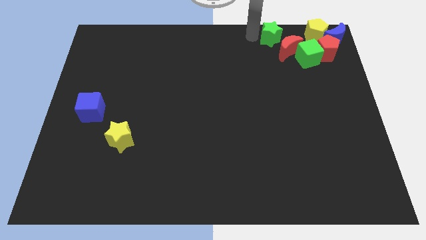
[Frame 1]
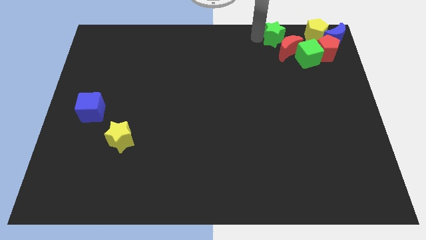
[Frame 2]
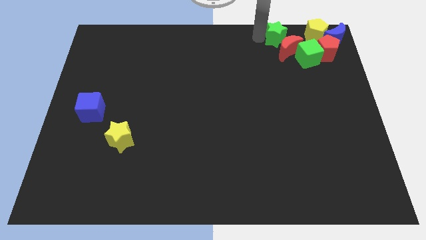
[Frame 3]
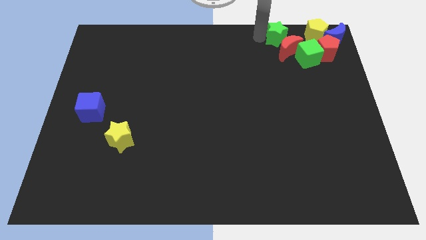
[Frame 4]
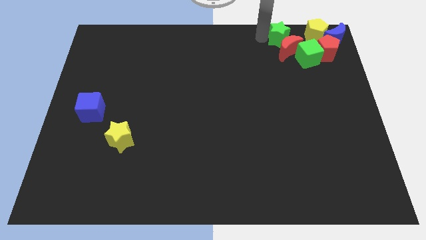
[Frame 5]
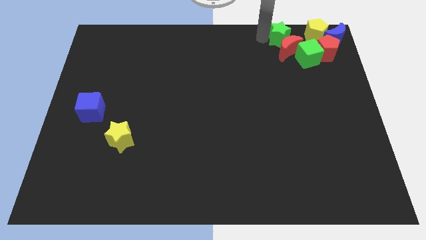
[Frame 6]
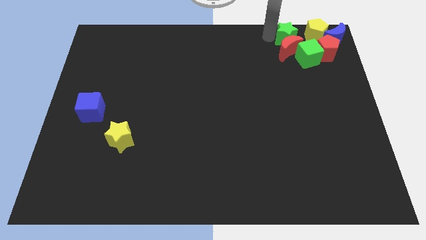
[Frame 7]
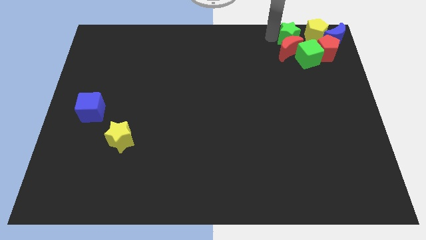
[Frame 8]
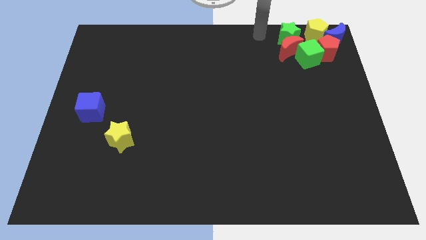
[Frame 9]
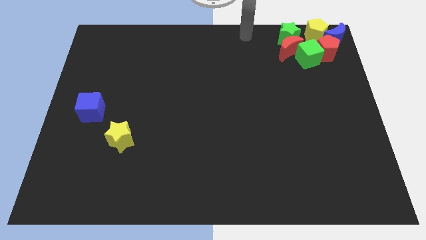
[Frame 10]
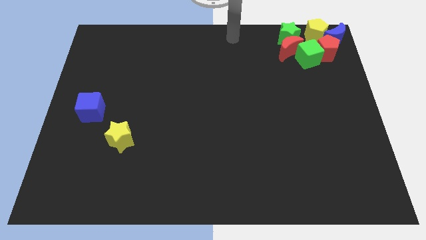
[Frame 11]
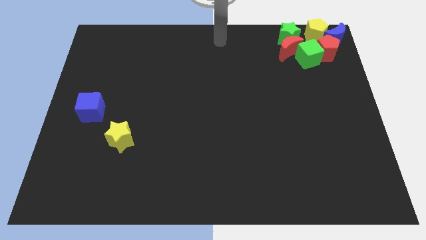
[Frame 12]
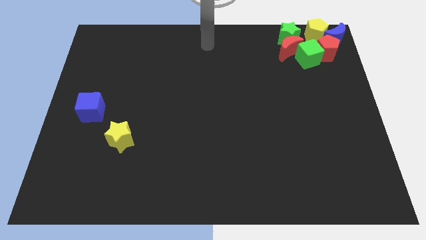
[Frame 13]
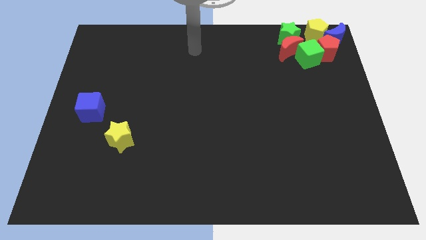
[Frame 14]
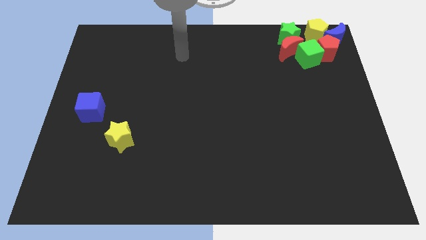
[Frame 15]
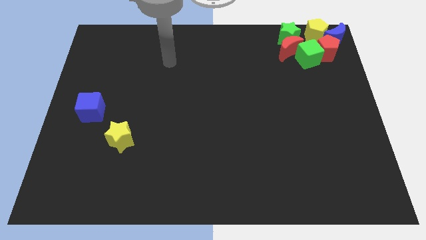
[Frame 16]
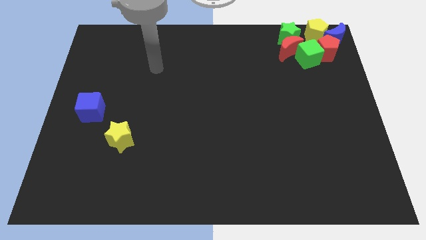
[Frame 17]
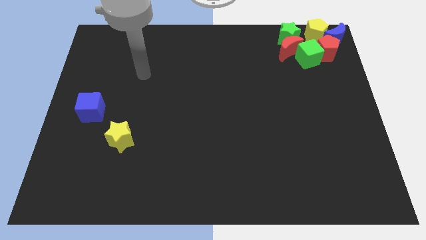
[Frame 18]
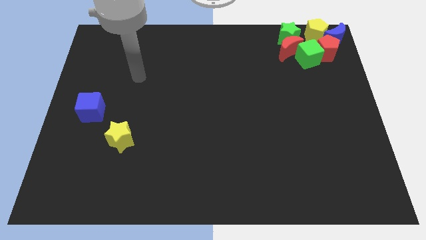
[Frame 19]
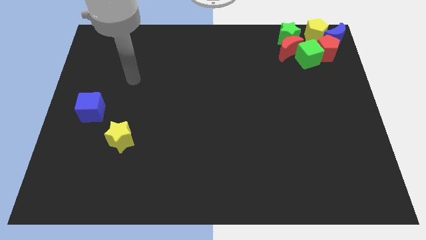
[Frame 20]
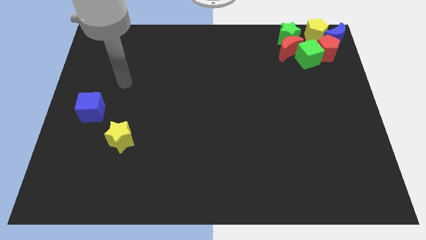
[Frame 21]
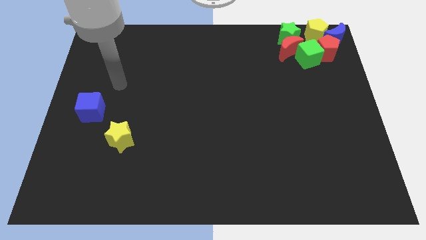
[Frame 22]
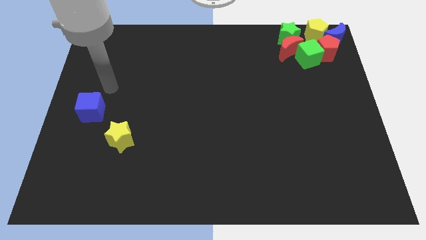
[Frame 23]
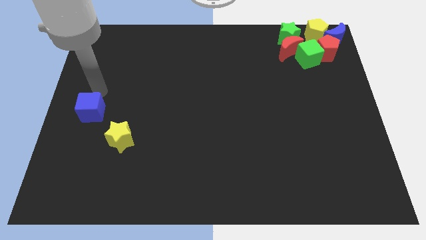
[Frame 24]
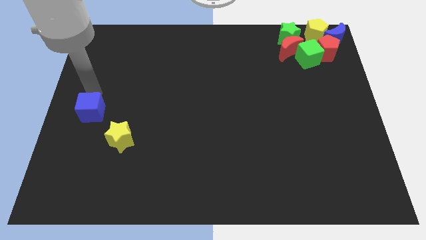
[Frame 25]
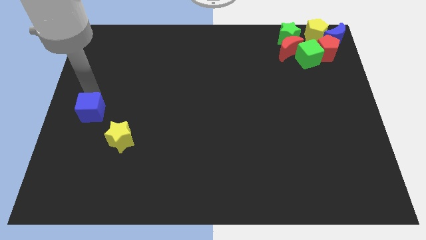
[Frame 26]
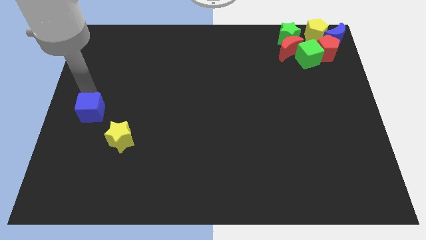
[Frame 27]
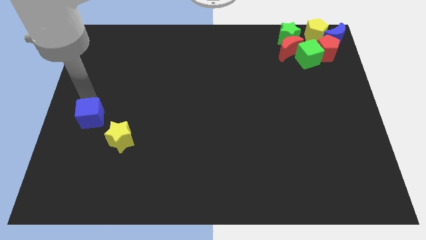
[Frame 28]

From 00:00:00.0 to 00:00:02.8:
place your arm top of blue cube

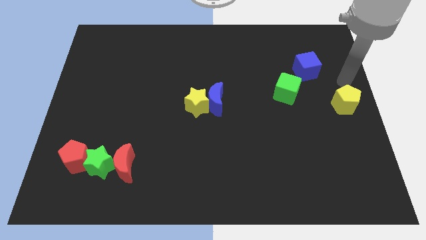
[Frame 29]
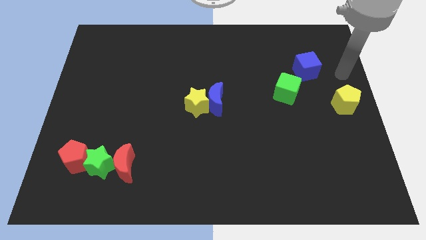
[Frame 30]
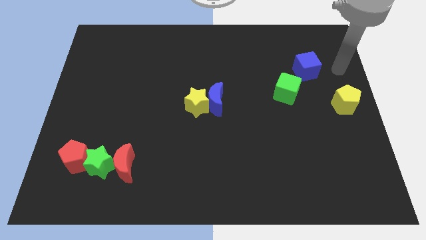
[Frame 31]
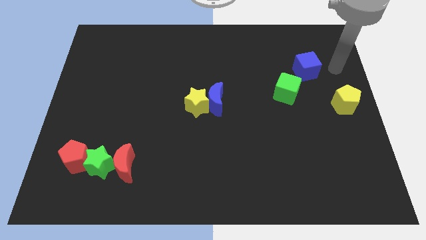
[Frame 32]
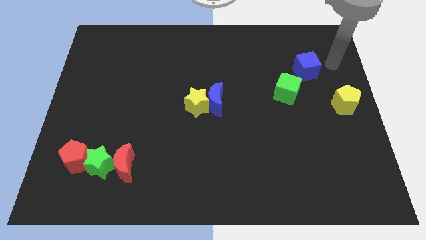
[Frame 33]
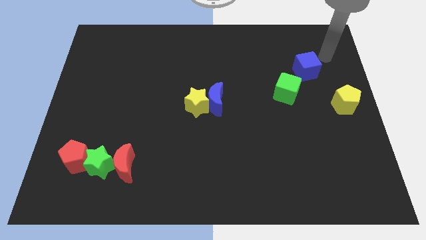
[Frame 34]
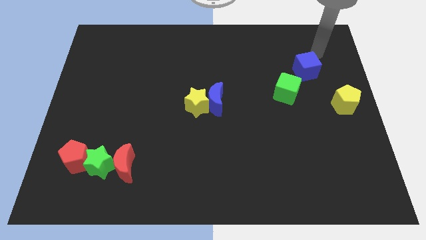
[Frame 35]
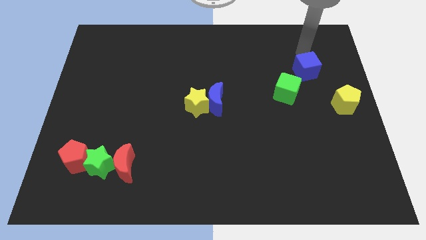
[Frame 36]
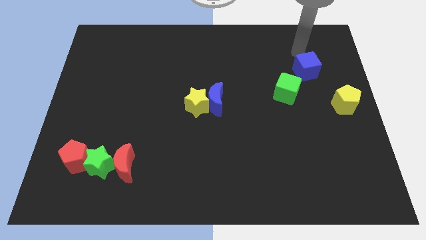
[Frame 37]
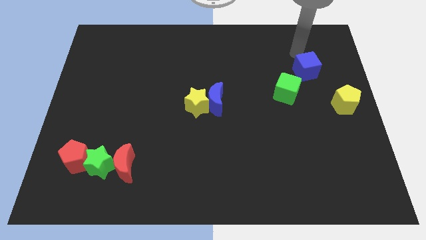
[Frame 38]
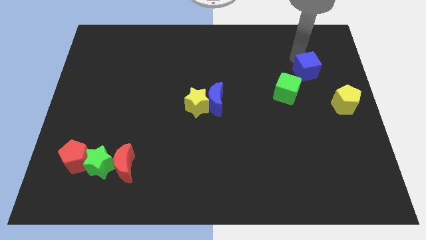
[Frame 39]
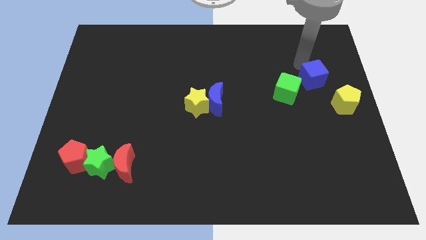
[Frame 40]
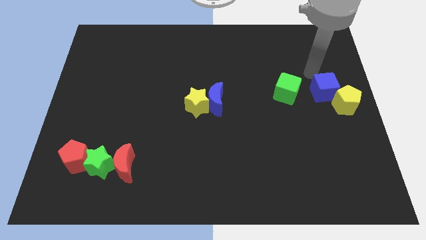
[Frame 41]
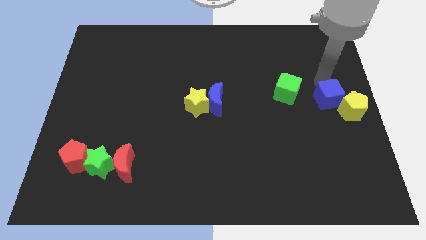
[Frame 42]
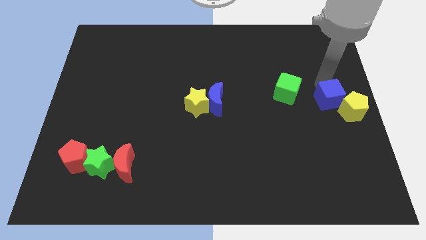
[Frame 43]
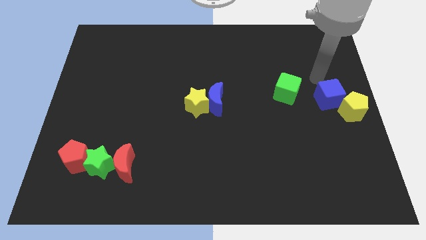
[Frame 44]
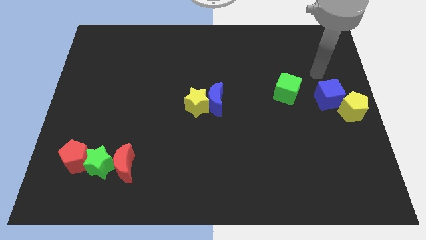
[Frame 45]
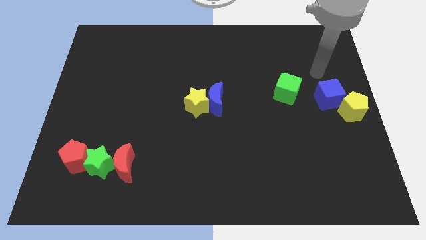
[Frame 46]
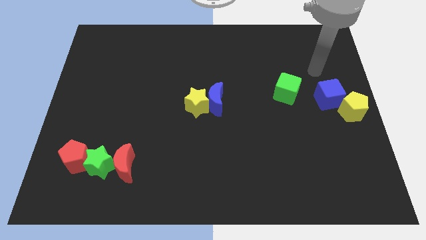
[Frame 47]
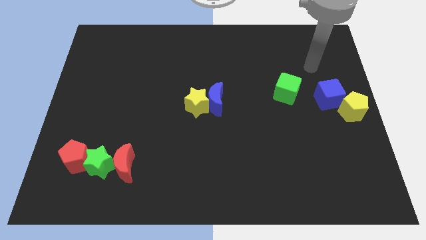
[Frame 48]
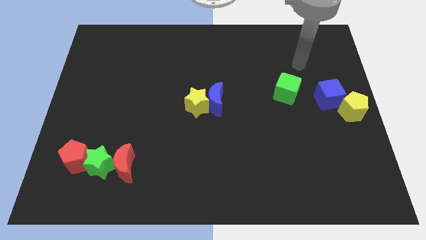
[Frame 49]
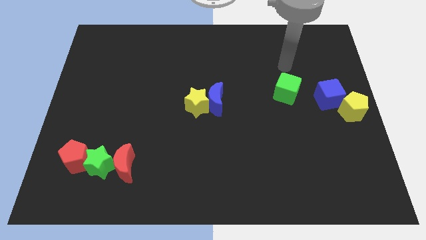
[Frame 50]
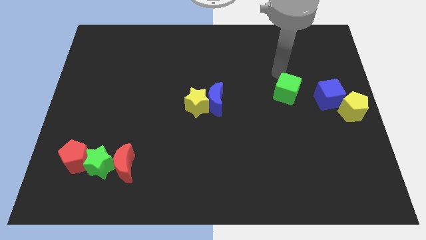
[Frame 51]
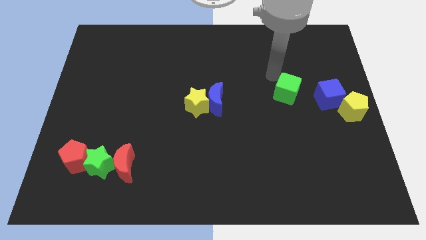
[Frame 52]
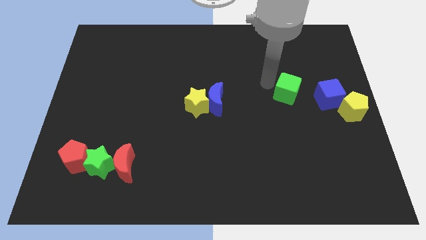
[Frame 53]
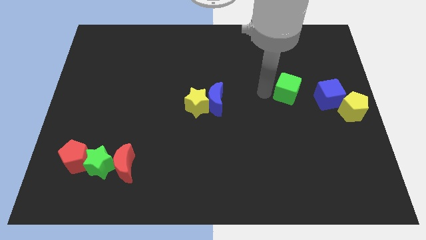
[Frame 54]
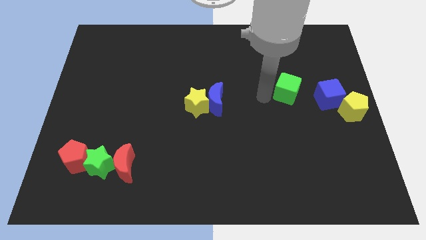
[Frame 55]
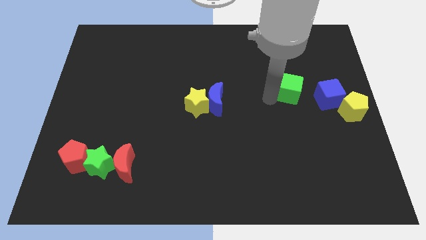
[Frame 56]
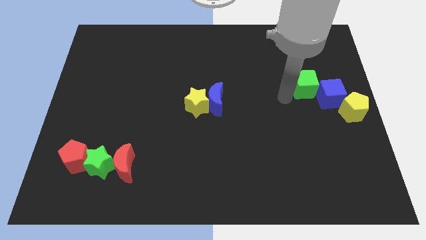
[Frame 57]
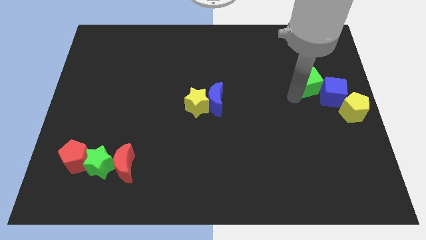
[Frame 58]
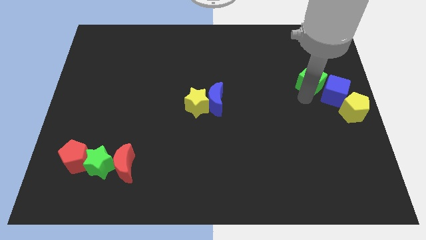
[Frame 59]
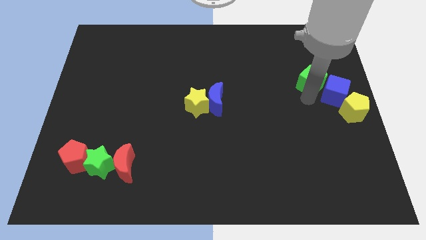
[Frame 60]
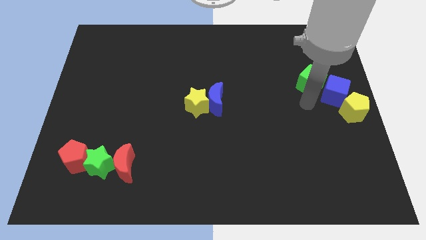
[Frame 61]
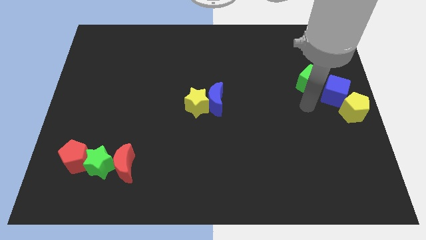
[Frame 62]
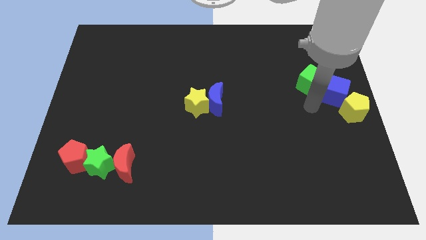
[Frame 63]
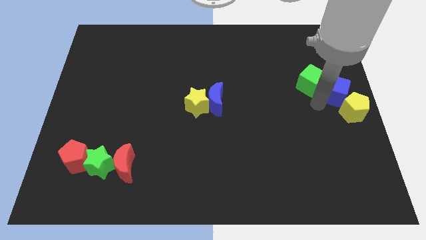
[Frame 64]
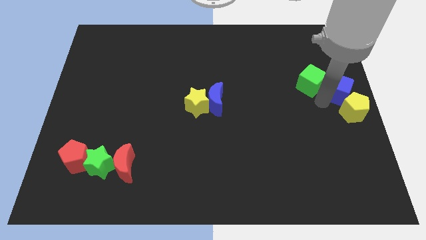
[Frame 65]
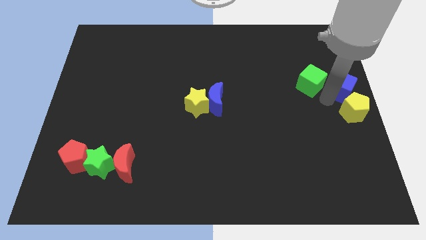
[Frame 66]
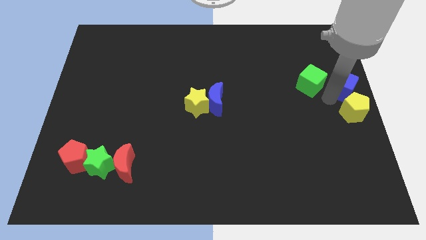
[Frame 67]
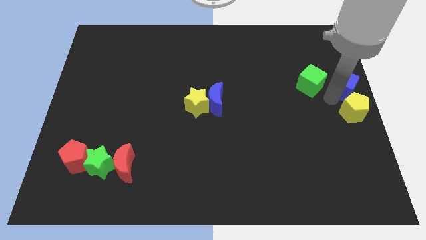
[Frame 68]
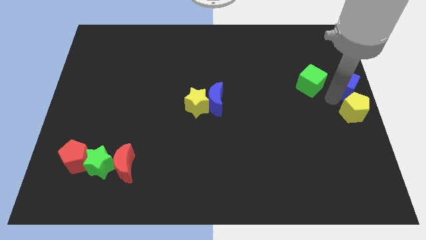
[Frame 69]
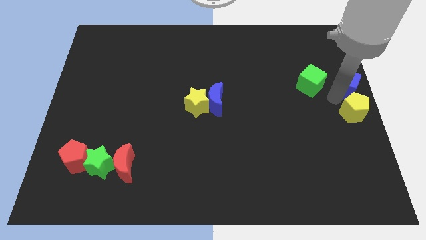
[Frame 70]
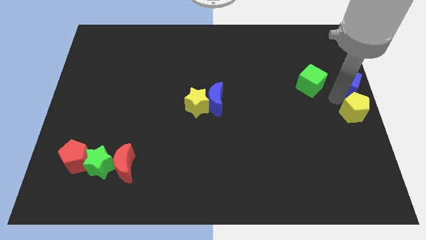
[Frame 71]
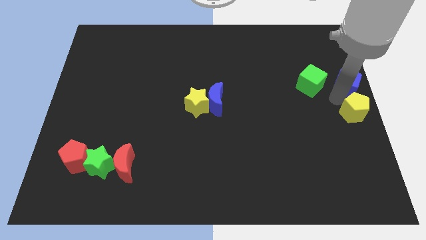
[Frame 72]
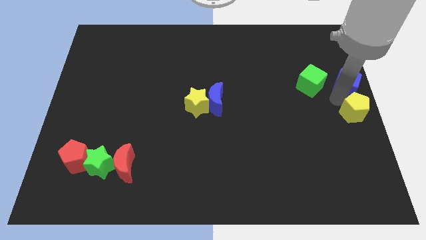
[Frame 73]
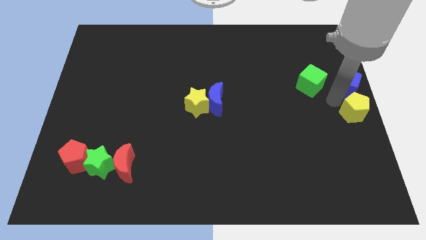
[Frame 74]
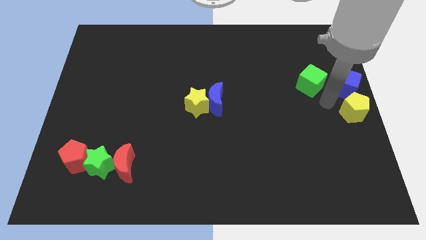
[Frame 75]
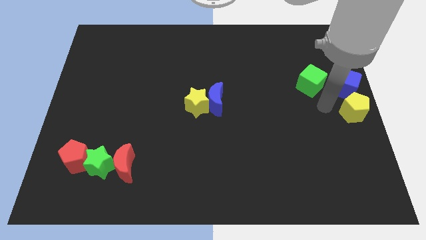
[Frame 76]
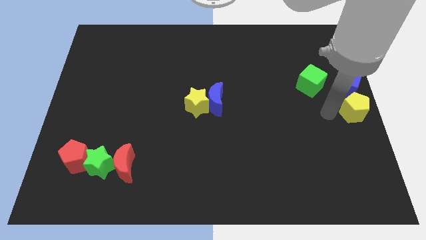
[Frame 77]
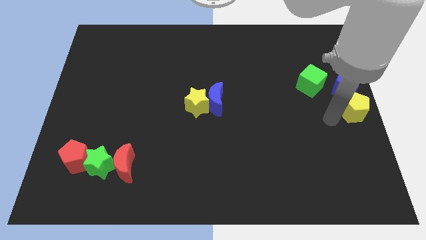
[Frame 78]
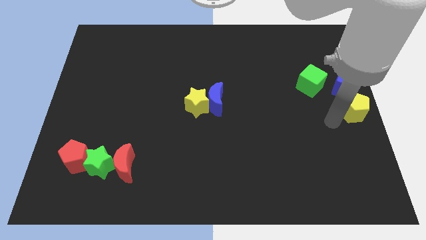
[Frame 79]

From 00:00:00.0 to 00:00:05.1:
move the blue cube to the top of the yellow pentagon

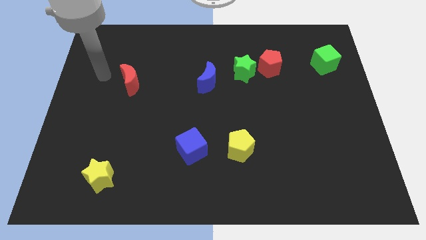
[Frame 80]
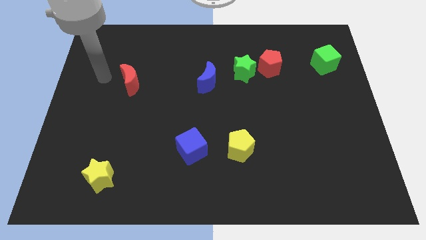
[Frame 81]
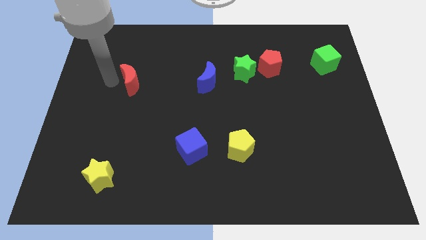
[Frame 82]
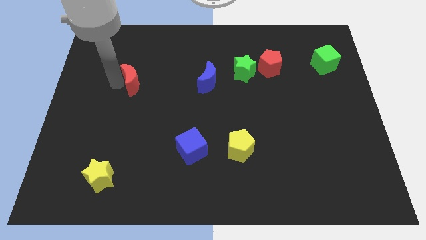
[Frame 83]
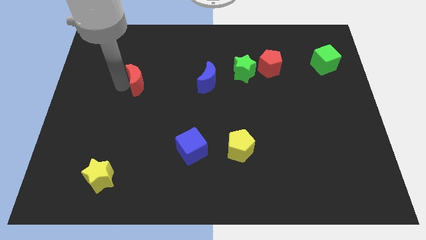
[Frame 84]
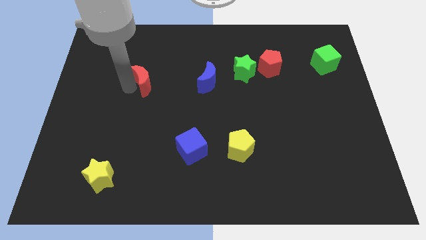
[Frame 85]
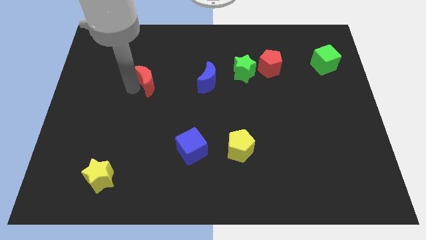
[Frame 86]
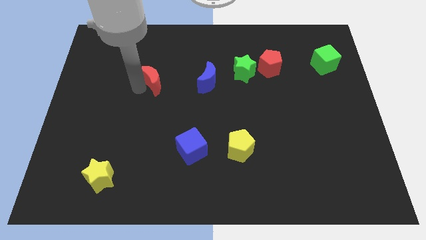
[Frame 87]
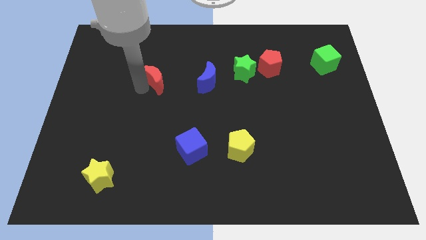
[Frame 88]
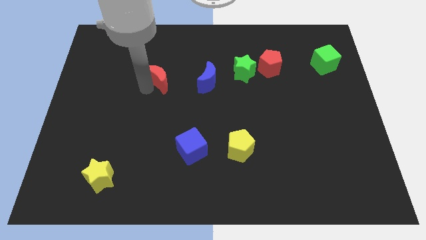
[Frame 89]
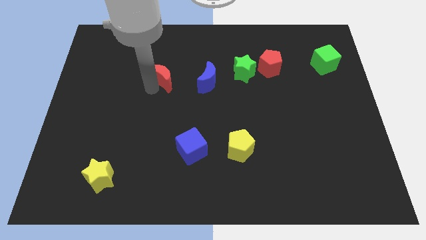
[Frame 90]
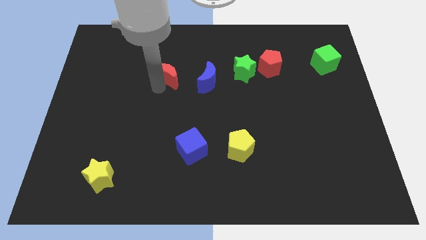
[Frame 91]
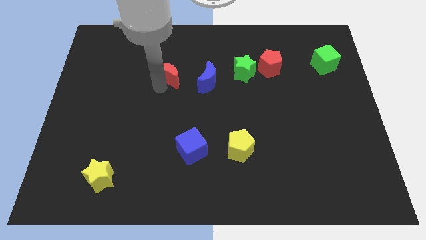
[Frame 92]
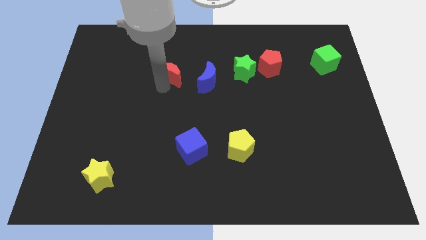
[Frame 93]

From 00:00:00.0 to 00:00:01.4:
place the red moon above the blue cube
